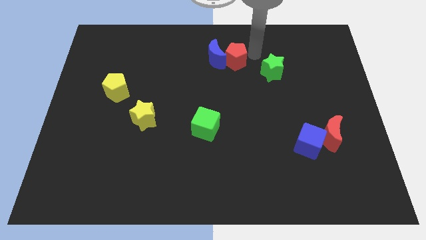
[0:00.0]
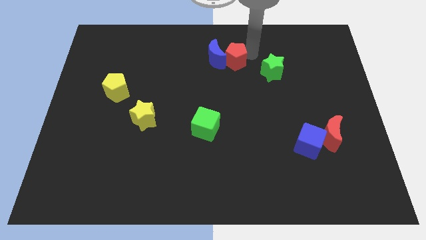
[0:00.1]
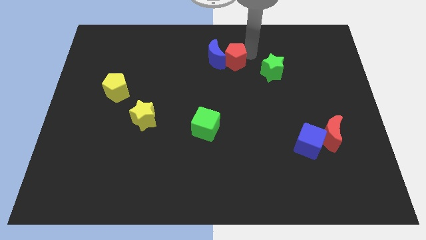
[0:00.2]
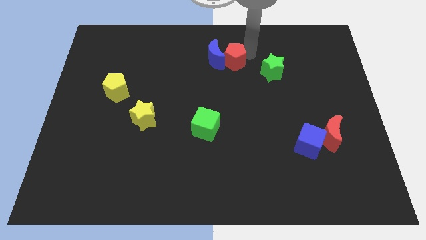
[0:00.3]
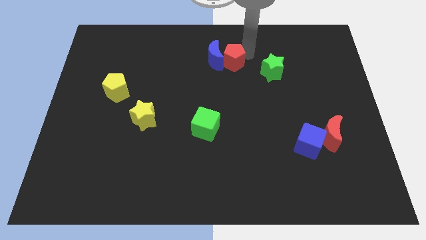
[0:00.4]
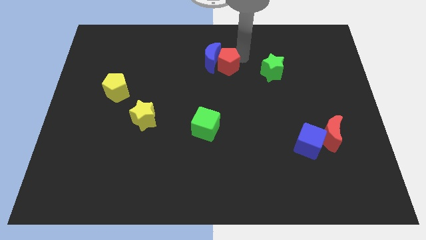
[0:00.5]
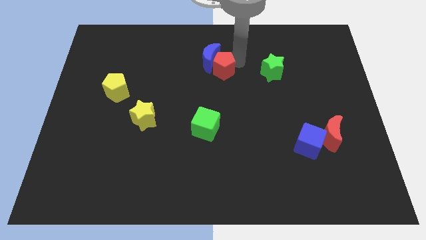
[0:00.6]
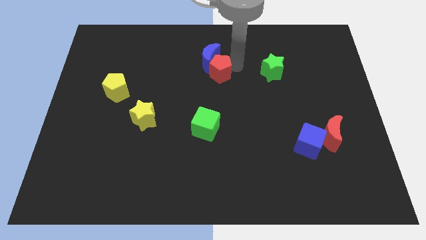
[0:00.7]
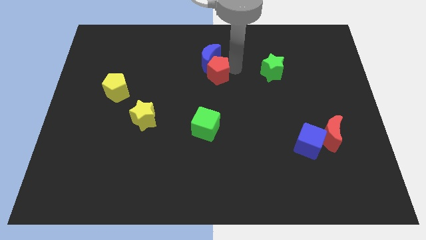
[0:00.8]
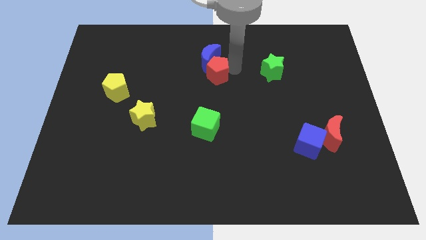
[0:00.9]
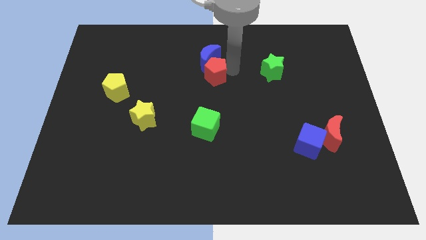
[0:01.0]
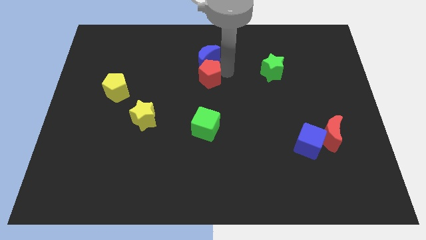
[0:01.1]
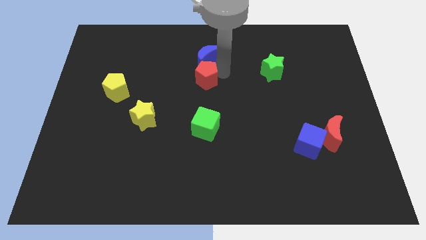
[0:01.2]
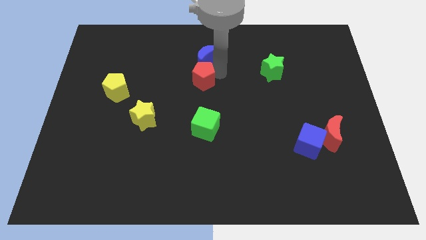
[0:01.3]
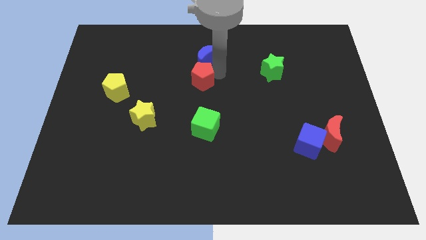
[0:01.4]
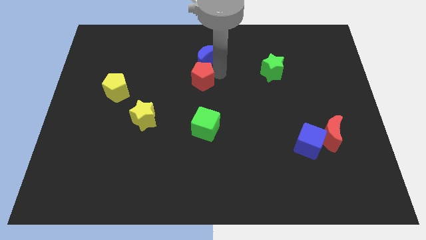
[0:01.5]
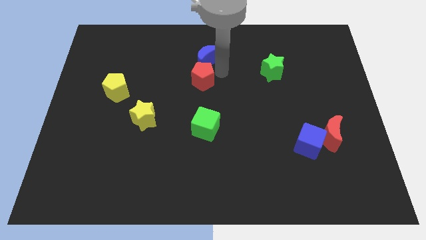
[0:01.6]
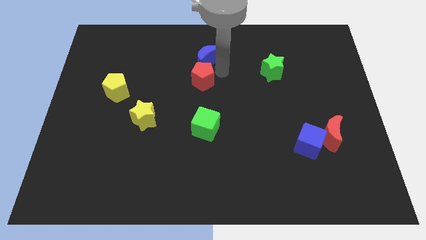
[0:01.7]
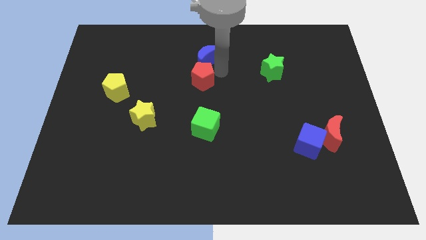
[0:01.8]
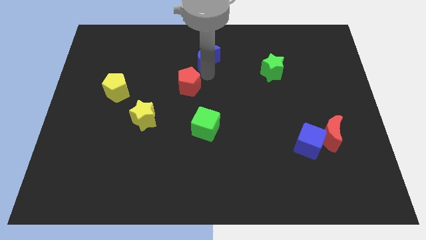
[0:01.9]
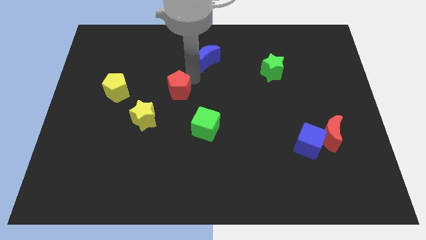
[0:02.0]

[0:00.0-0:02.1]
separate the red pentagon and blue moon

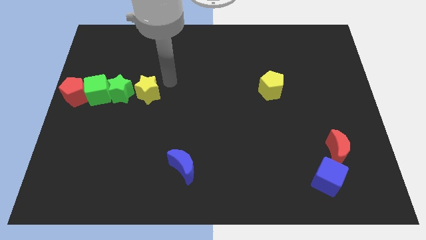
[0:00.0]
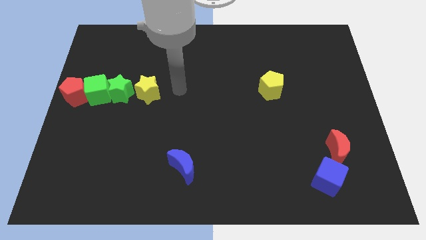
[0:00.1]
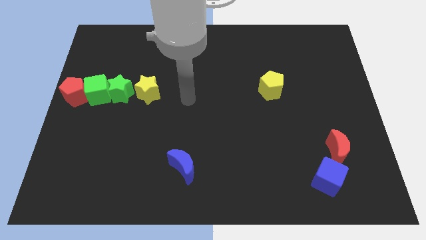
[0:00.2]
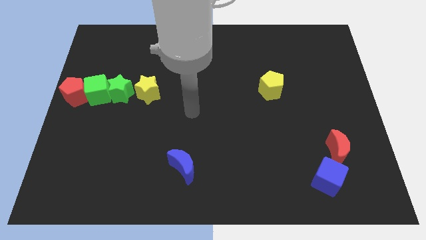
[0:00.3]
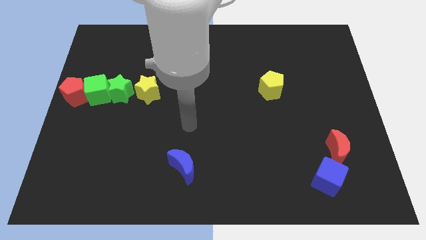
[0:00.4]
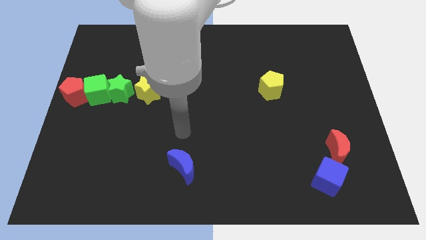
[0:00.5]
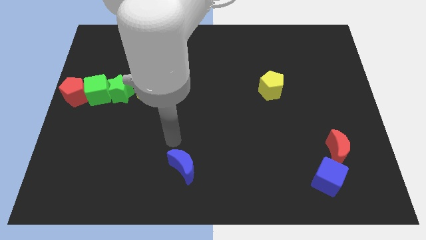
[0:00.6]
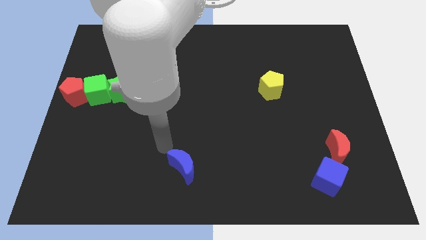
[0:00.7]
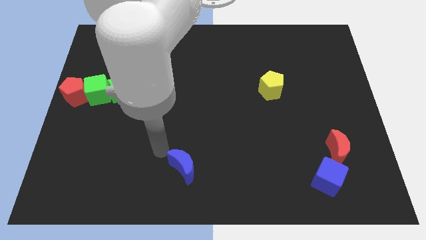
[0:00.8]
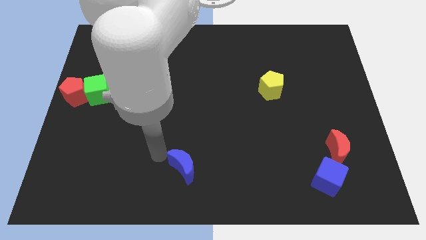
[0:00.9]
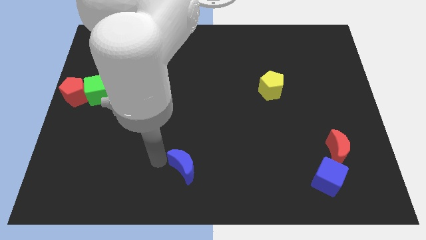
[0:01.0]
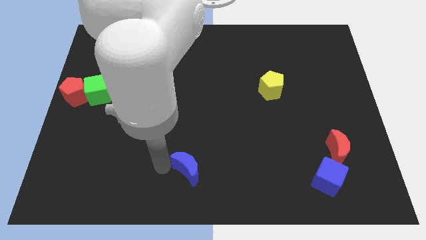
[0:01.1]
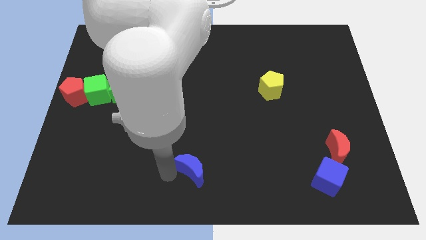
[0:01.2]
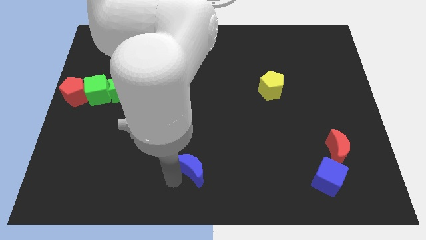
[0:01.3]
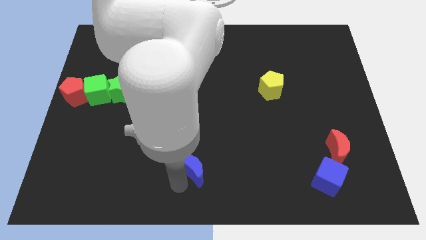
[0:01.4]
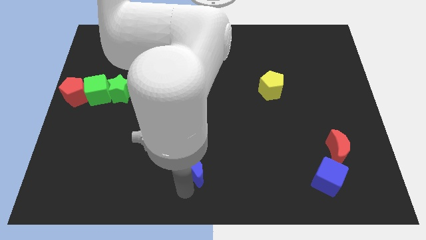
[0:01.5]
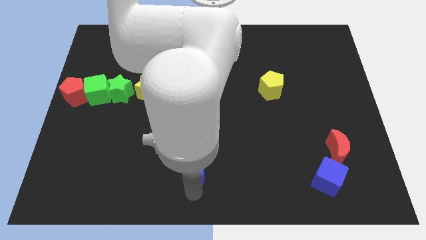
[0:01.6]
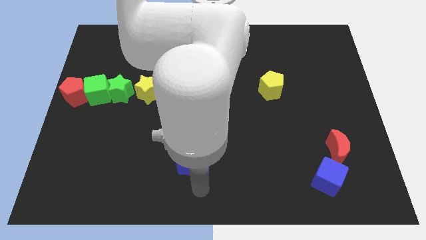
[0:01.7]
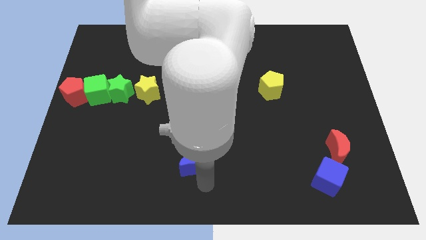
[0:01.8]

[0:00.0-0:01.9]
touch your arm to the blue moon

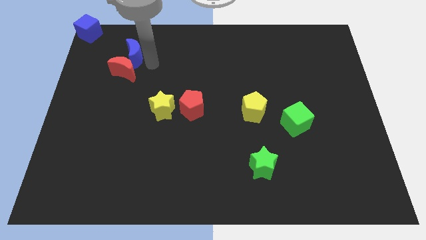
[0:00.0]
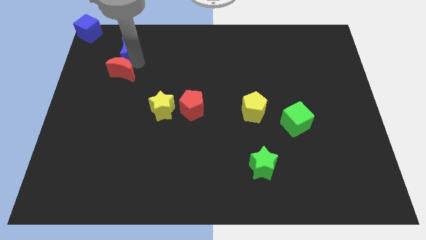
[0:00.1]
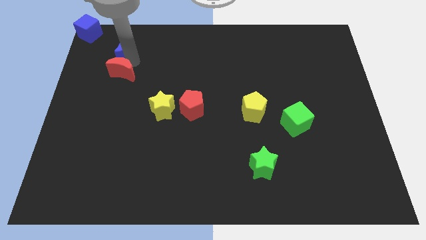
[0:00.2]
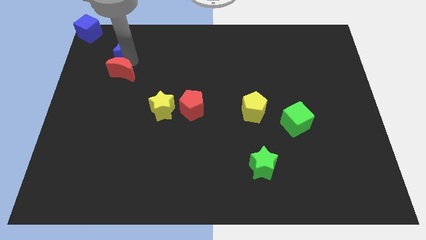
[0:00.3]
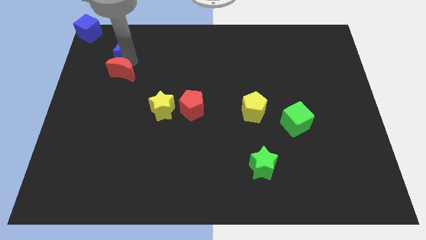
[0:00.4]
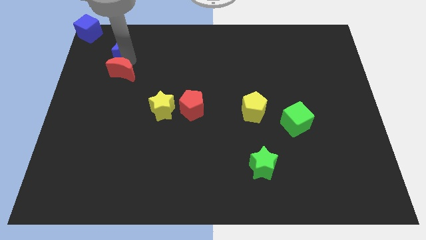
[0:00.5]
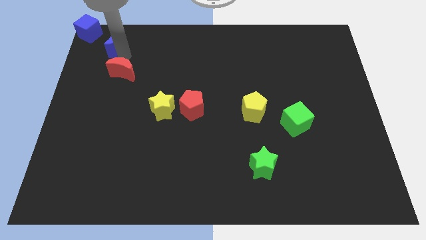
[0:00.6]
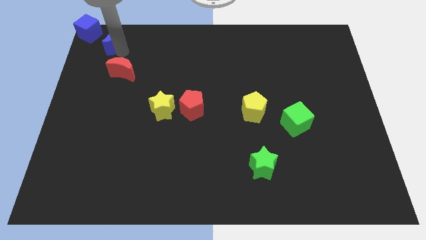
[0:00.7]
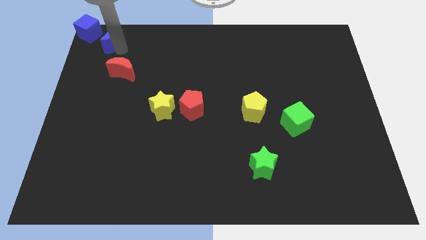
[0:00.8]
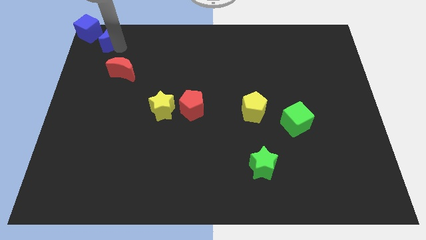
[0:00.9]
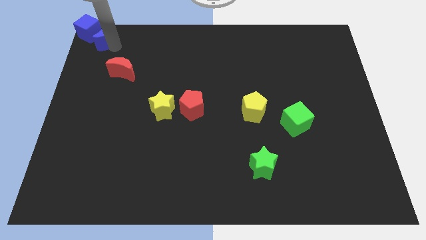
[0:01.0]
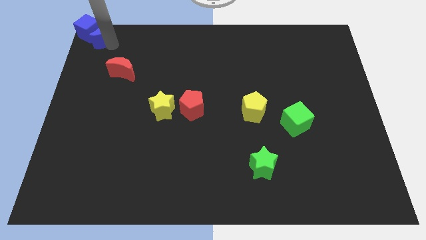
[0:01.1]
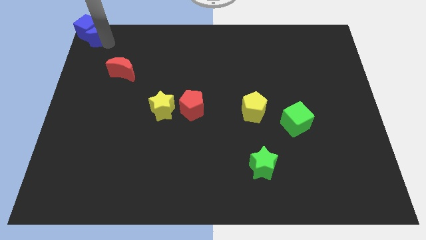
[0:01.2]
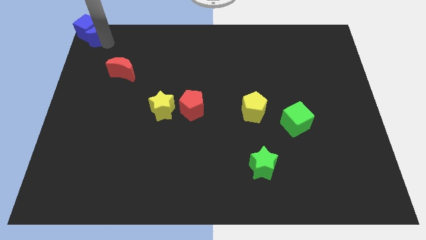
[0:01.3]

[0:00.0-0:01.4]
push the blue moon into the right side of the blue cube

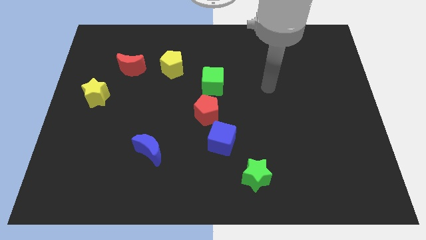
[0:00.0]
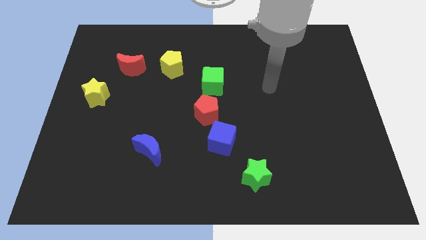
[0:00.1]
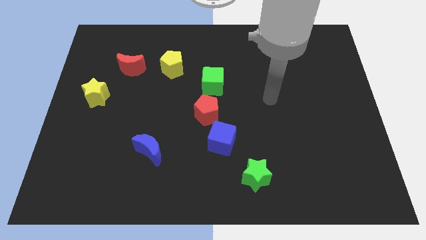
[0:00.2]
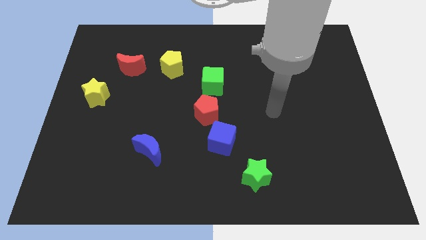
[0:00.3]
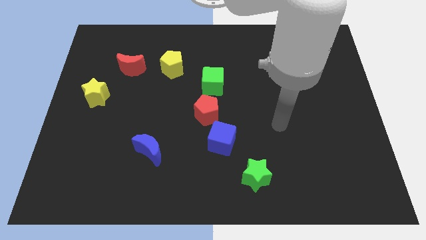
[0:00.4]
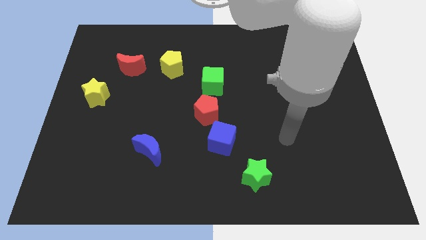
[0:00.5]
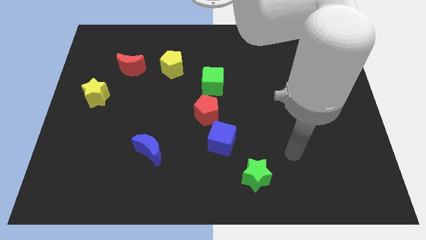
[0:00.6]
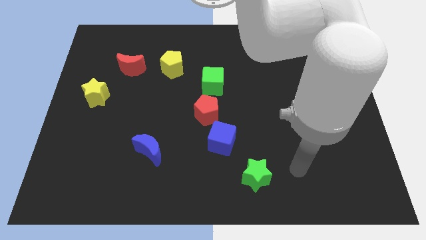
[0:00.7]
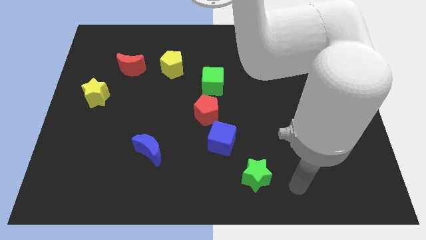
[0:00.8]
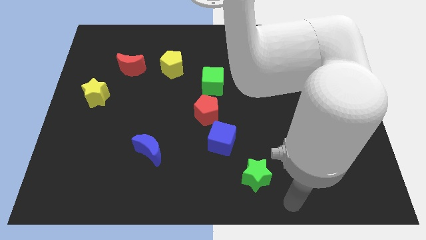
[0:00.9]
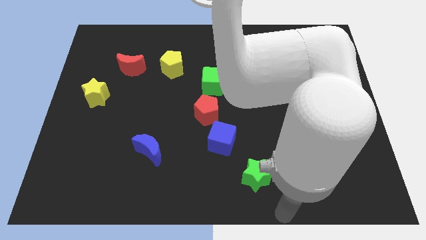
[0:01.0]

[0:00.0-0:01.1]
slide your hand to the bottom right of green star

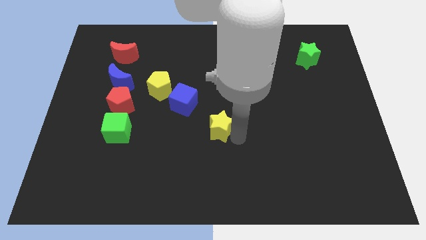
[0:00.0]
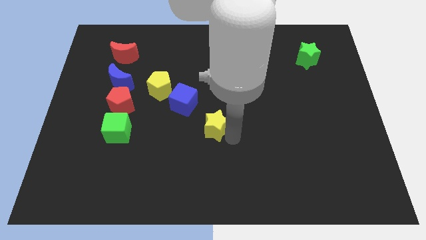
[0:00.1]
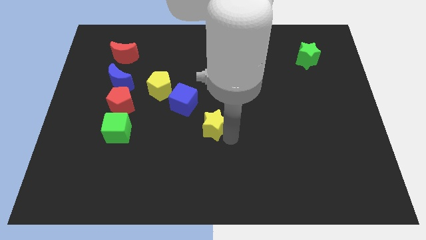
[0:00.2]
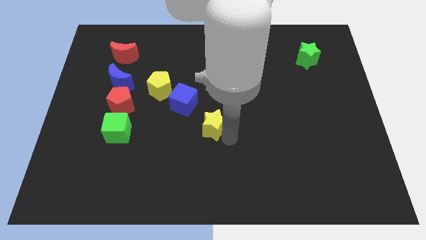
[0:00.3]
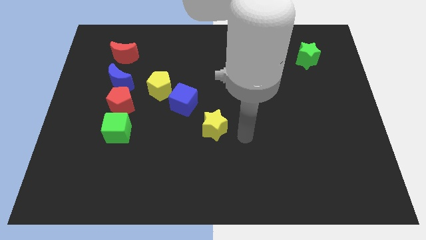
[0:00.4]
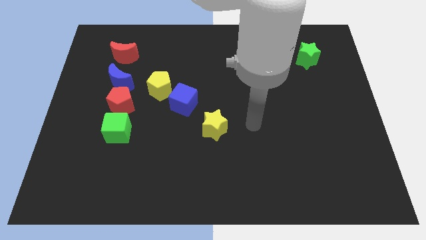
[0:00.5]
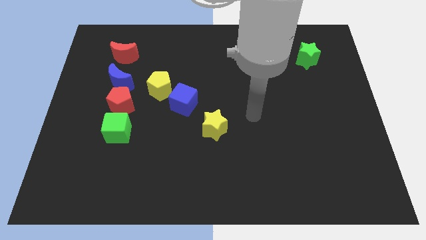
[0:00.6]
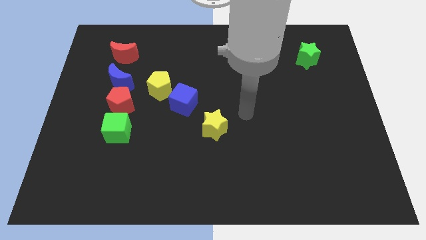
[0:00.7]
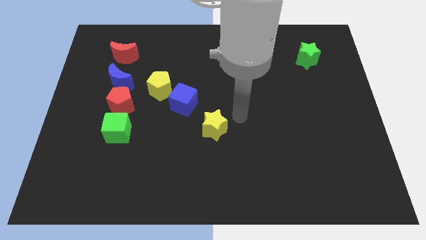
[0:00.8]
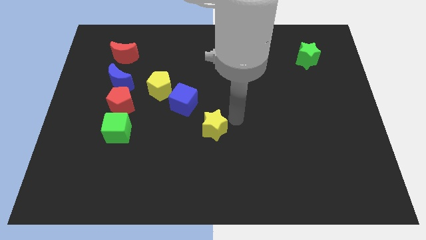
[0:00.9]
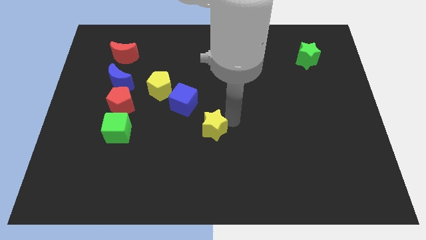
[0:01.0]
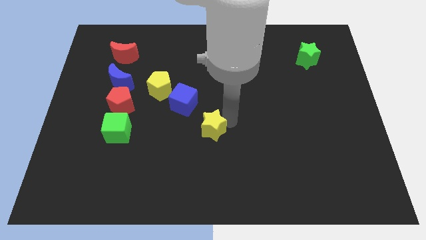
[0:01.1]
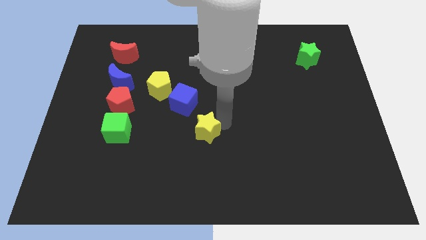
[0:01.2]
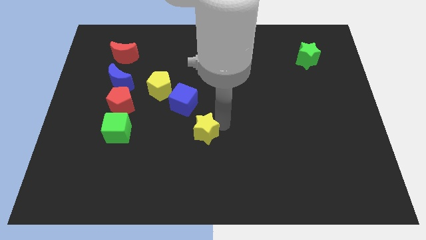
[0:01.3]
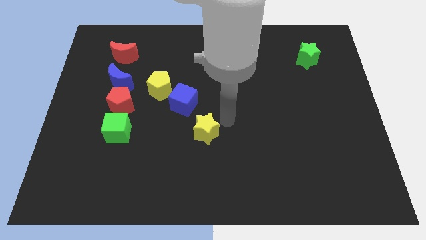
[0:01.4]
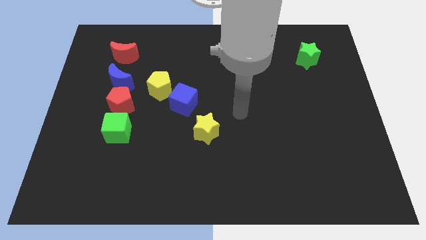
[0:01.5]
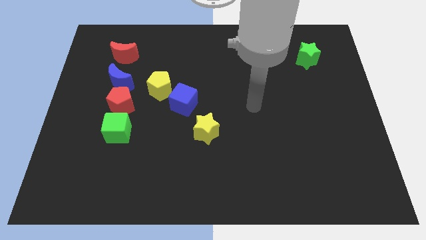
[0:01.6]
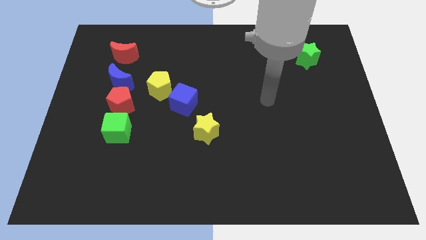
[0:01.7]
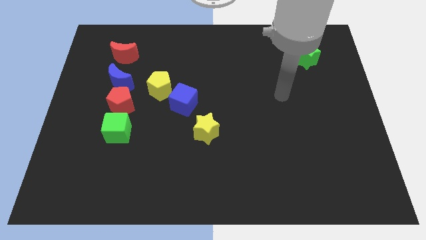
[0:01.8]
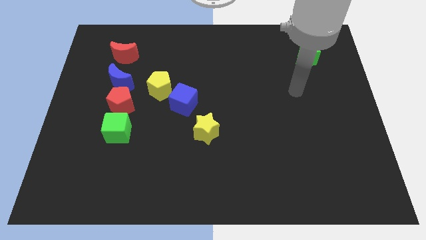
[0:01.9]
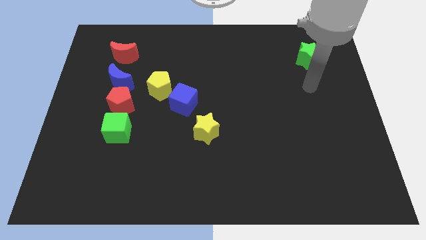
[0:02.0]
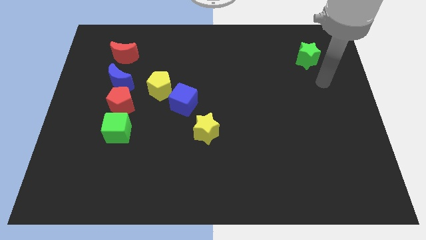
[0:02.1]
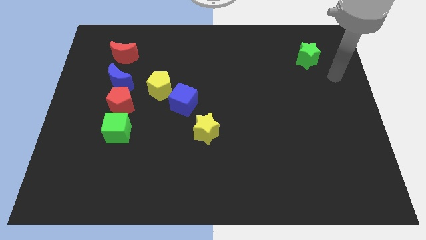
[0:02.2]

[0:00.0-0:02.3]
place the yellow star at the bottom right of the blue cube
